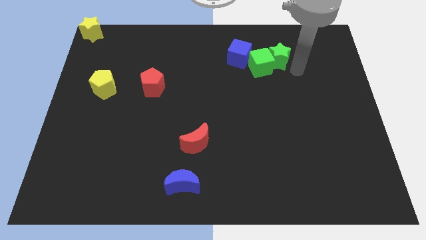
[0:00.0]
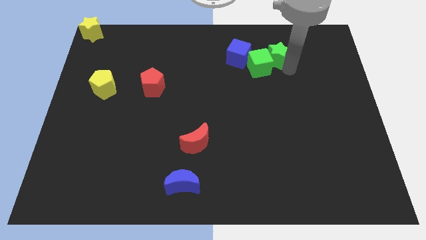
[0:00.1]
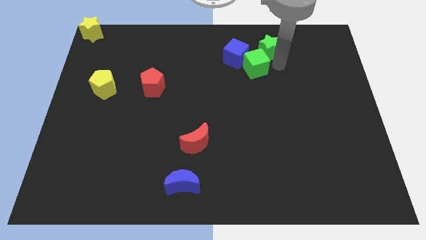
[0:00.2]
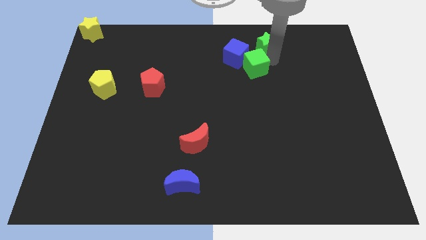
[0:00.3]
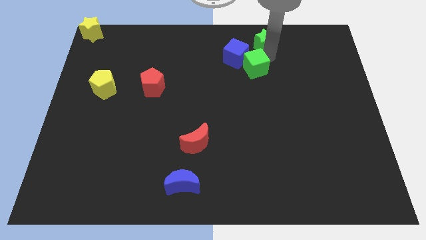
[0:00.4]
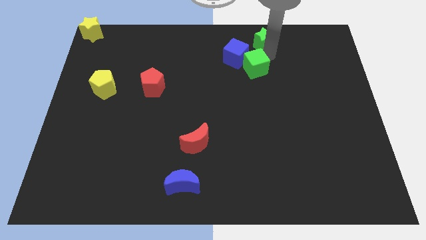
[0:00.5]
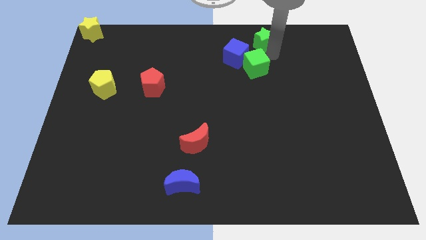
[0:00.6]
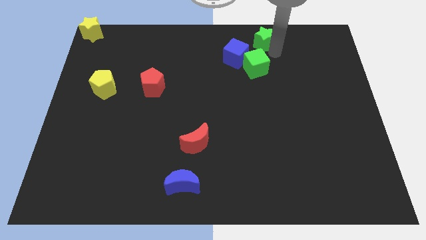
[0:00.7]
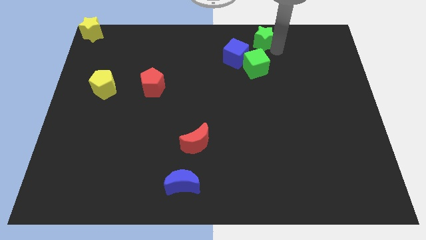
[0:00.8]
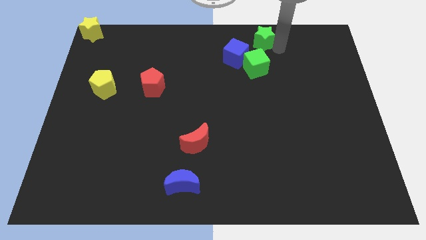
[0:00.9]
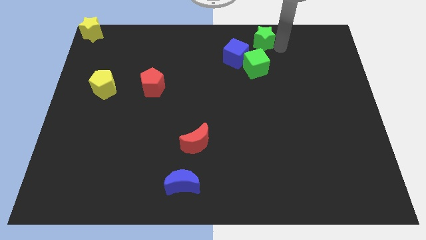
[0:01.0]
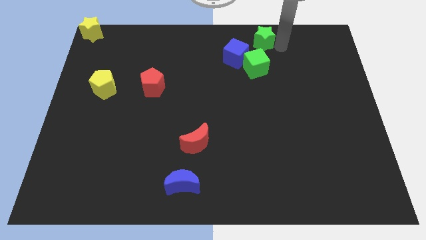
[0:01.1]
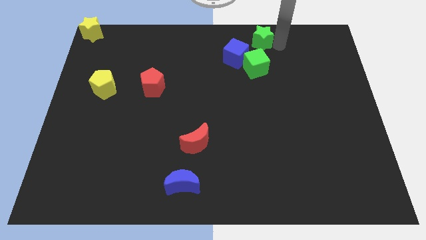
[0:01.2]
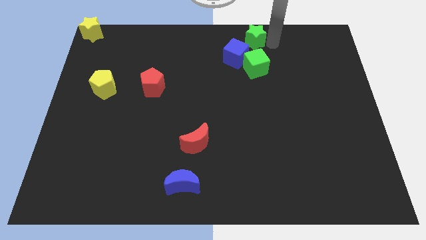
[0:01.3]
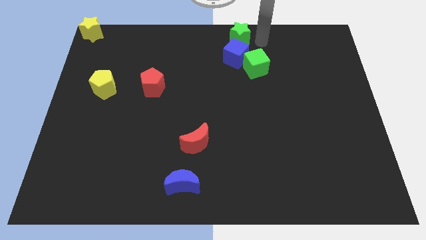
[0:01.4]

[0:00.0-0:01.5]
place the green star above the green cube

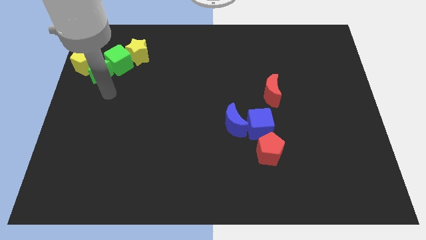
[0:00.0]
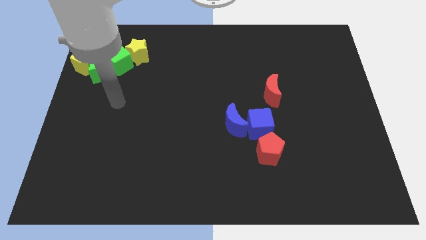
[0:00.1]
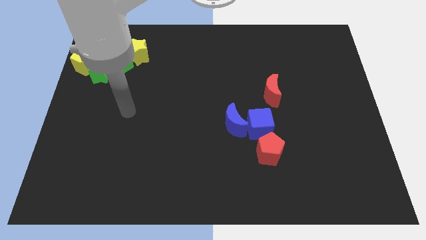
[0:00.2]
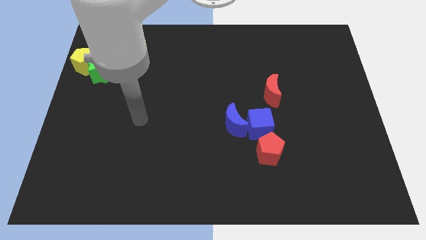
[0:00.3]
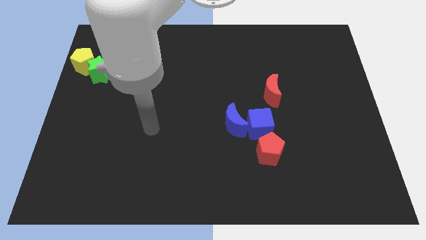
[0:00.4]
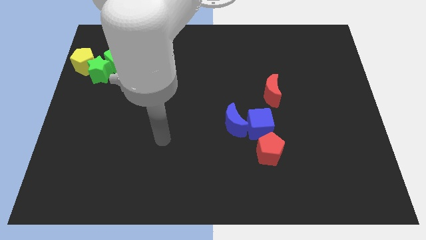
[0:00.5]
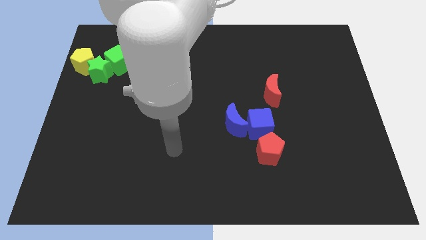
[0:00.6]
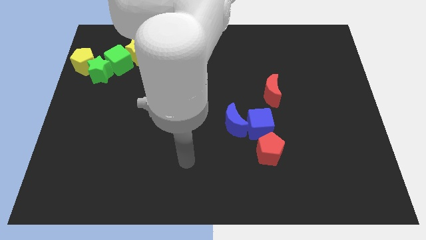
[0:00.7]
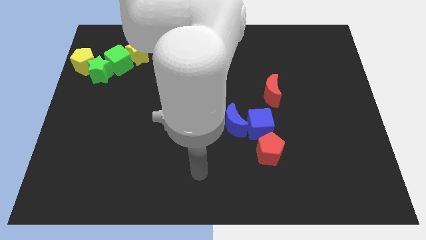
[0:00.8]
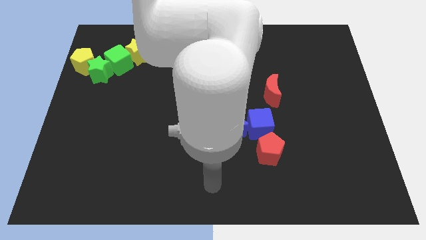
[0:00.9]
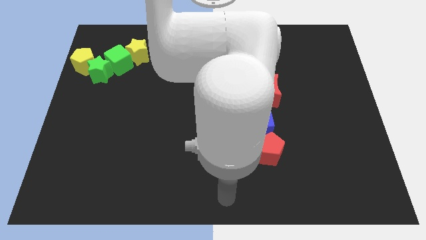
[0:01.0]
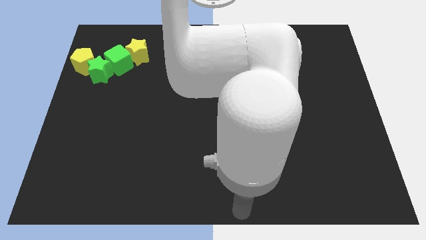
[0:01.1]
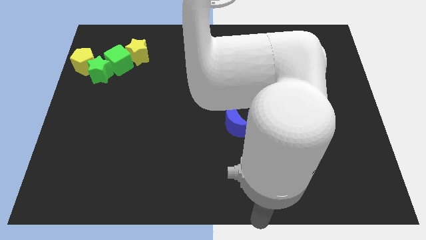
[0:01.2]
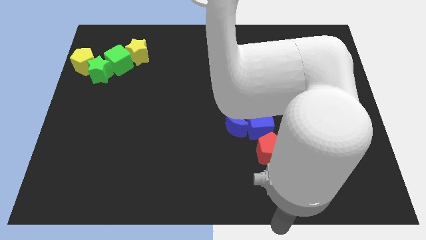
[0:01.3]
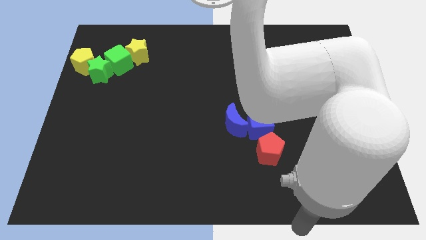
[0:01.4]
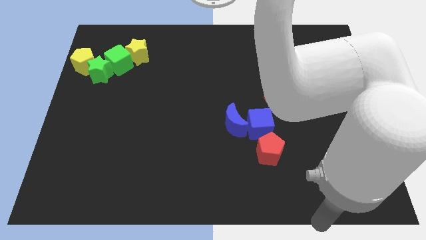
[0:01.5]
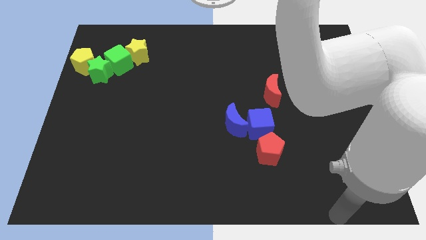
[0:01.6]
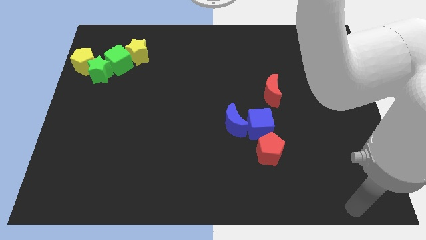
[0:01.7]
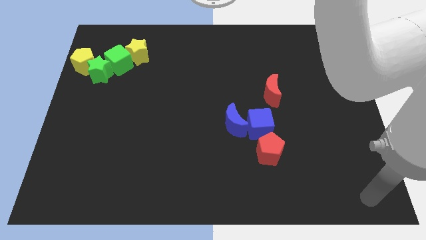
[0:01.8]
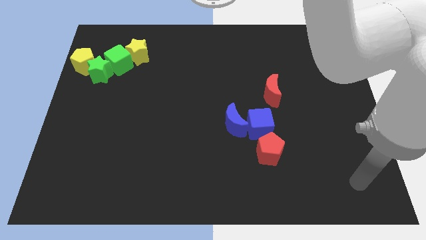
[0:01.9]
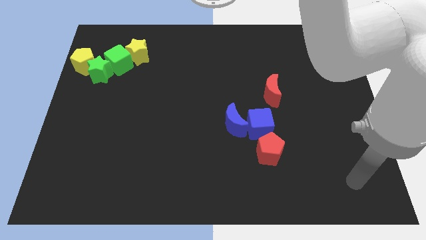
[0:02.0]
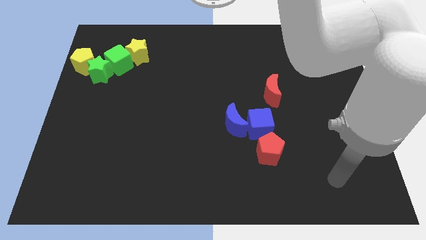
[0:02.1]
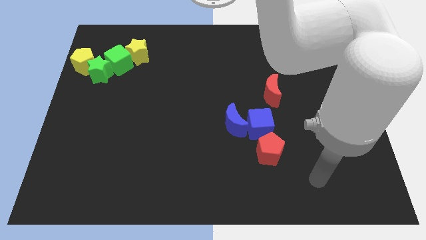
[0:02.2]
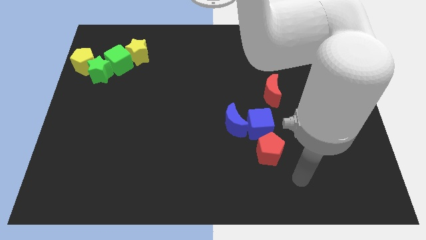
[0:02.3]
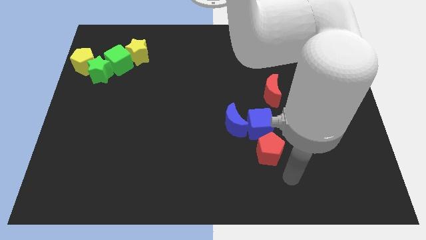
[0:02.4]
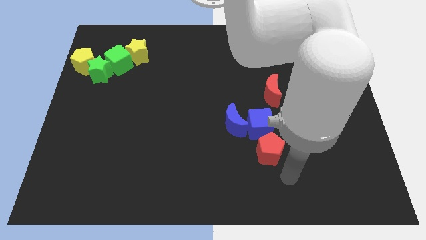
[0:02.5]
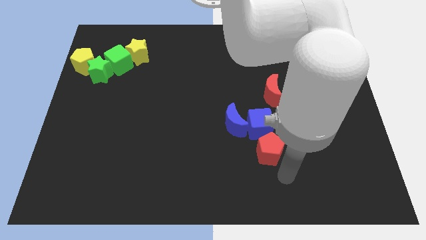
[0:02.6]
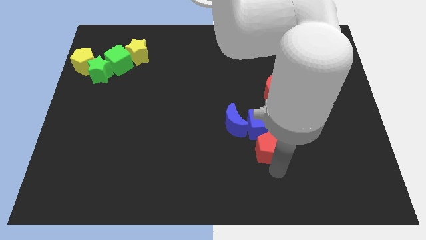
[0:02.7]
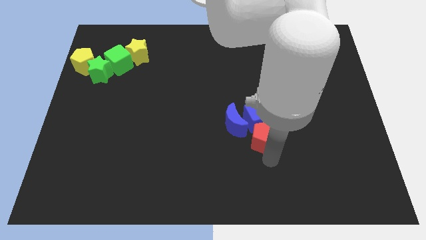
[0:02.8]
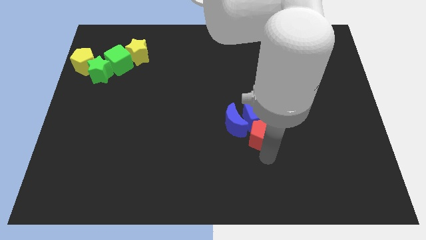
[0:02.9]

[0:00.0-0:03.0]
push blue cube and red pentagon towards the top side of the board

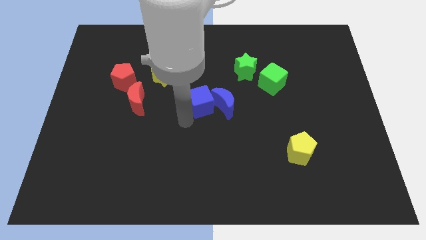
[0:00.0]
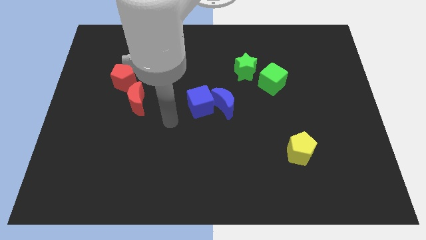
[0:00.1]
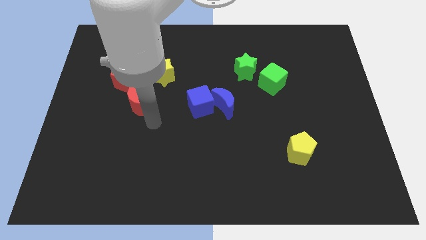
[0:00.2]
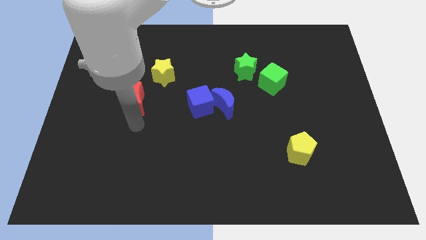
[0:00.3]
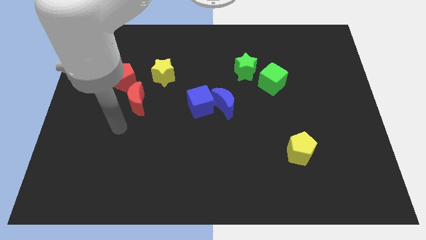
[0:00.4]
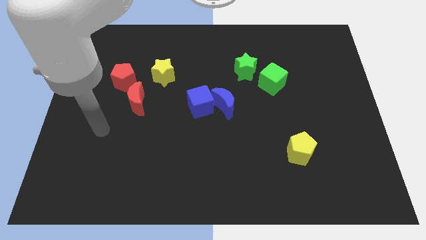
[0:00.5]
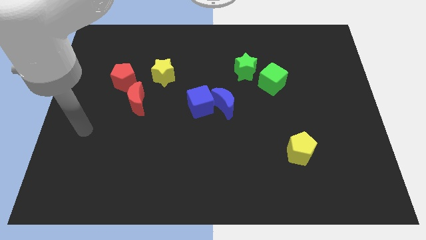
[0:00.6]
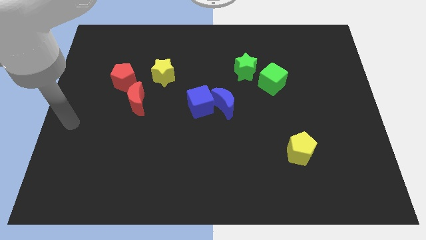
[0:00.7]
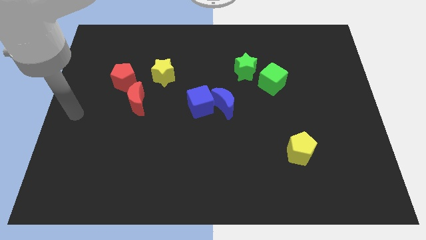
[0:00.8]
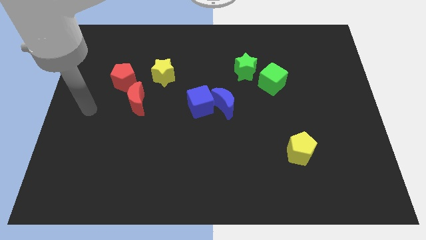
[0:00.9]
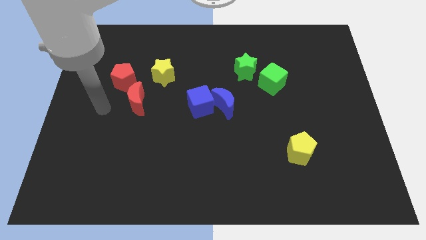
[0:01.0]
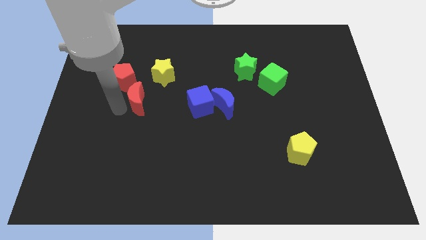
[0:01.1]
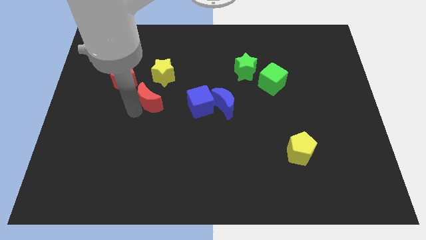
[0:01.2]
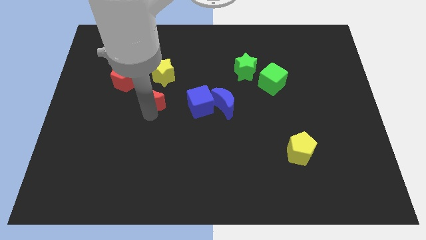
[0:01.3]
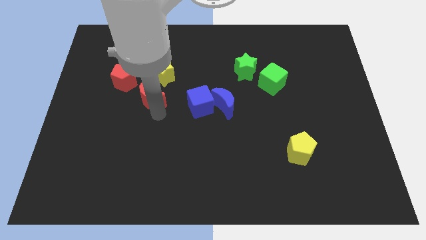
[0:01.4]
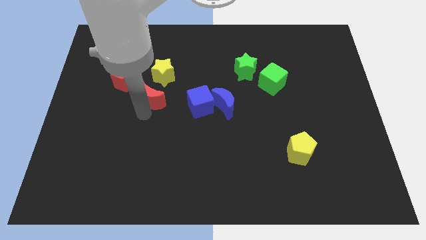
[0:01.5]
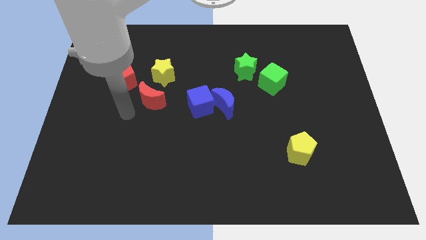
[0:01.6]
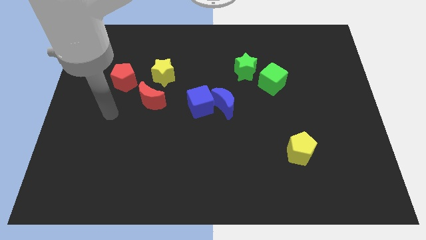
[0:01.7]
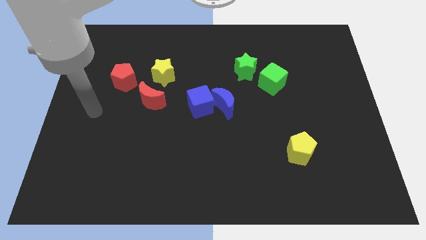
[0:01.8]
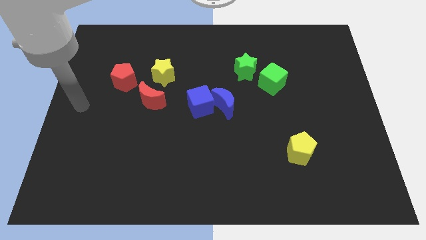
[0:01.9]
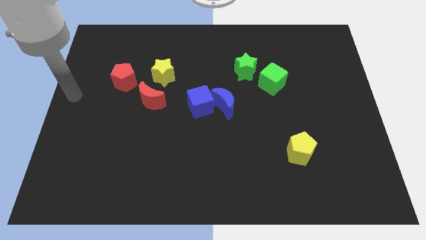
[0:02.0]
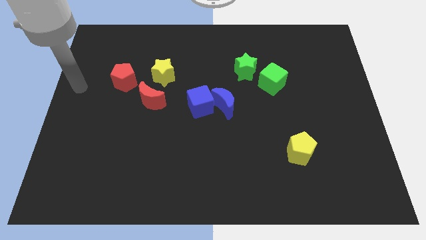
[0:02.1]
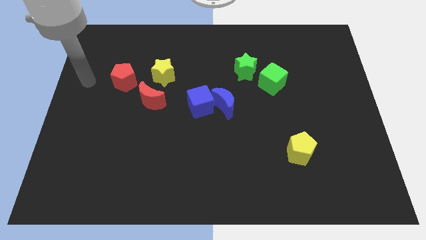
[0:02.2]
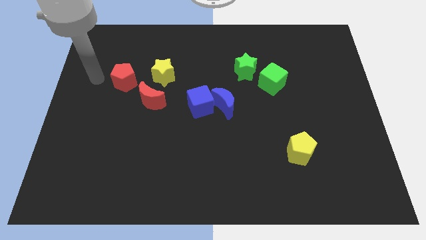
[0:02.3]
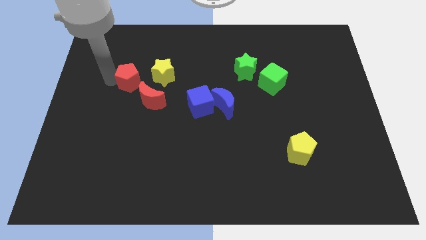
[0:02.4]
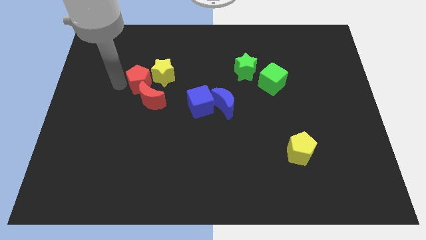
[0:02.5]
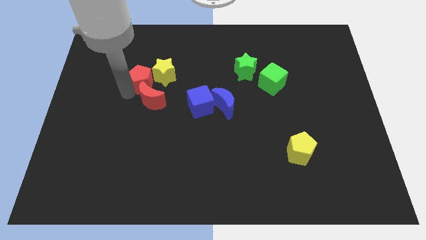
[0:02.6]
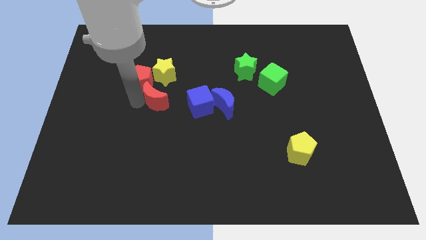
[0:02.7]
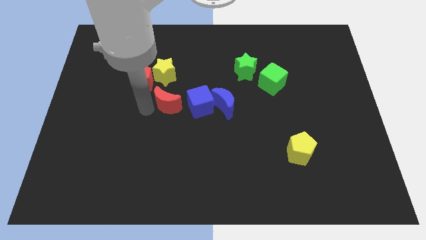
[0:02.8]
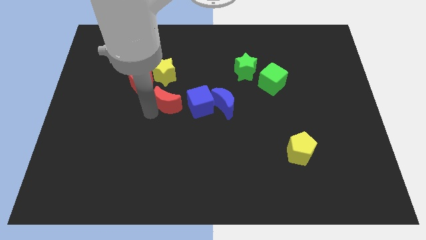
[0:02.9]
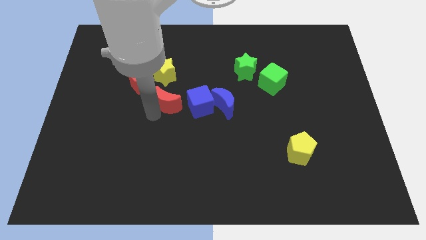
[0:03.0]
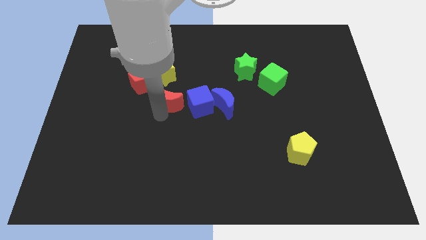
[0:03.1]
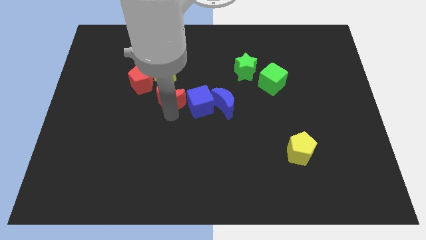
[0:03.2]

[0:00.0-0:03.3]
move the red crescent to the bottom of the yellow star

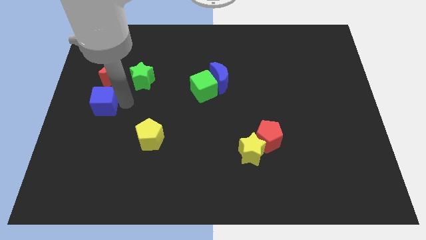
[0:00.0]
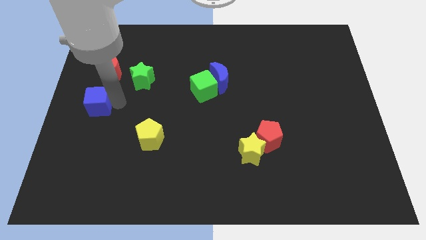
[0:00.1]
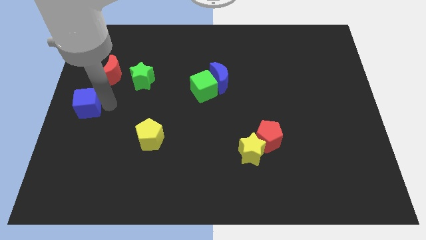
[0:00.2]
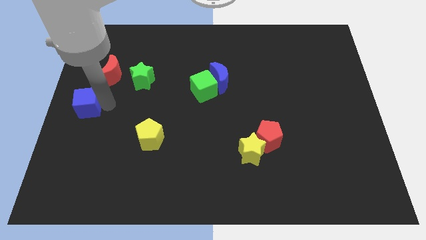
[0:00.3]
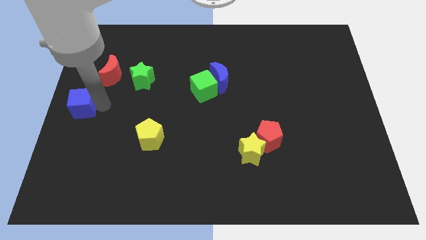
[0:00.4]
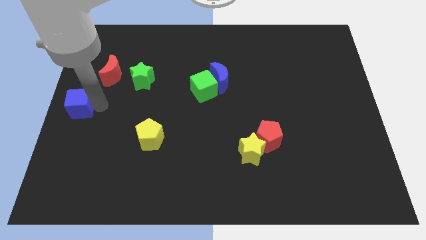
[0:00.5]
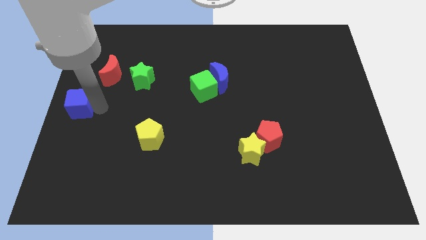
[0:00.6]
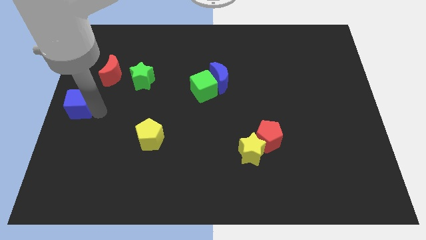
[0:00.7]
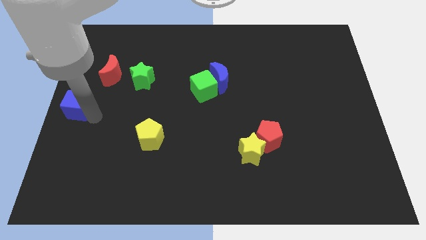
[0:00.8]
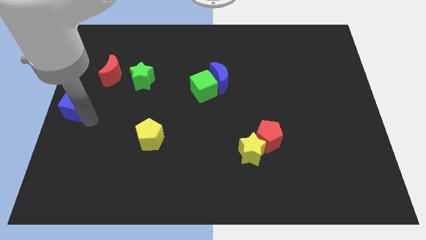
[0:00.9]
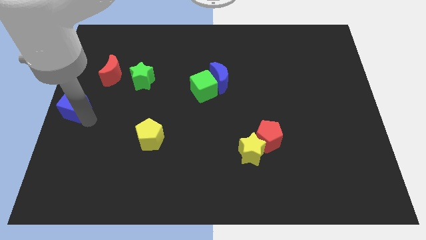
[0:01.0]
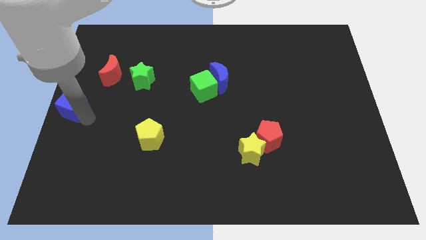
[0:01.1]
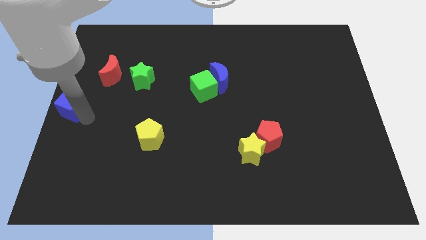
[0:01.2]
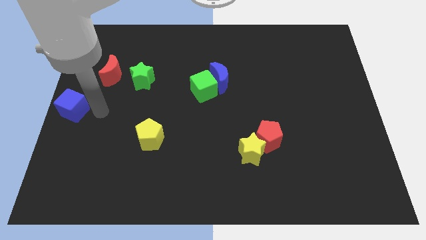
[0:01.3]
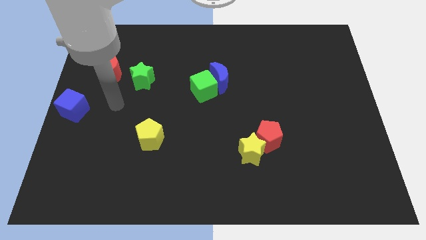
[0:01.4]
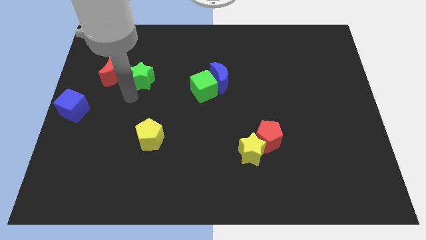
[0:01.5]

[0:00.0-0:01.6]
move blue cube towards middle left side of the board
